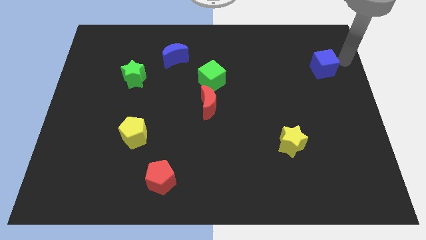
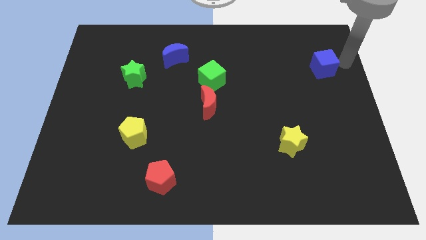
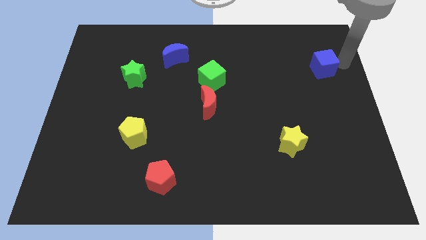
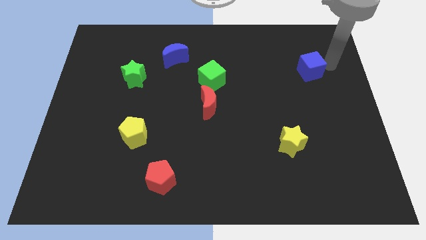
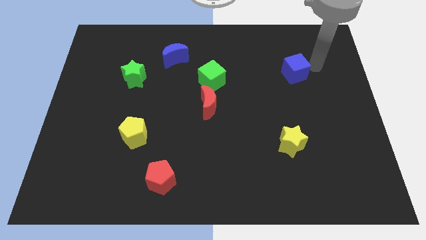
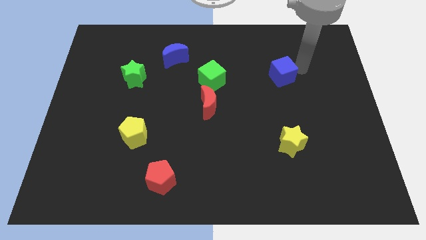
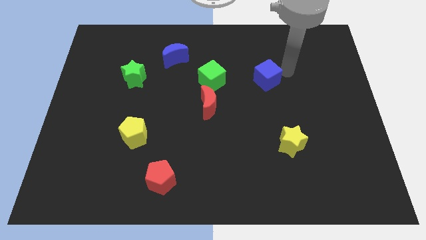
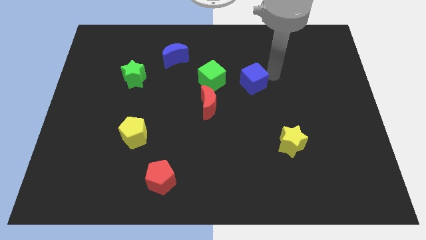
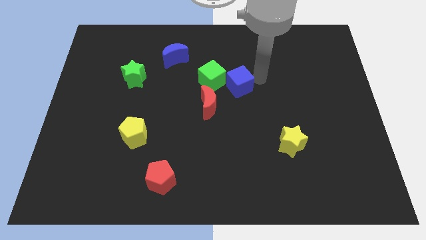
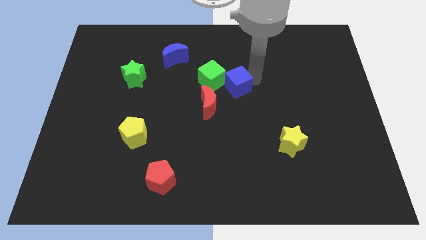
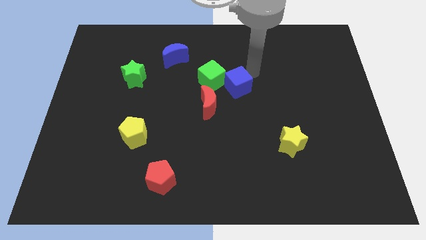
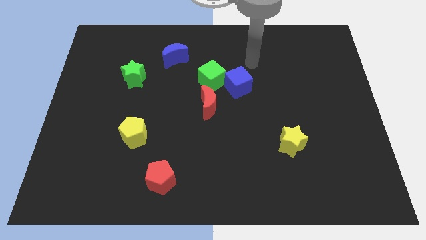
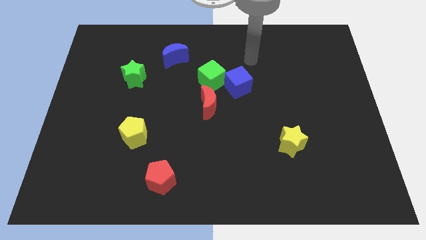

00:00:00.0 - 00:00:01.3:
push the blue cube closer to the green cube

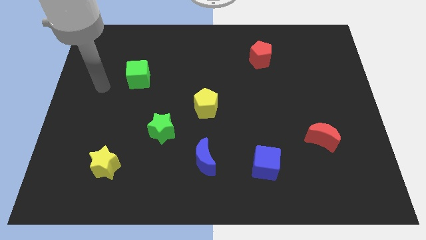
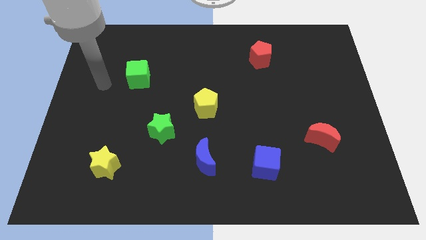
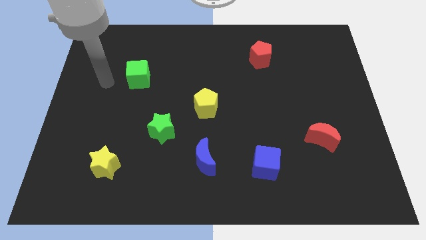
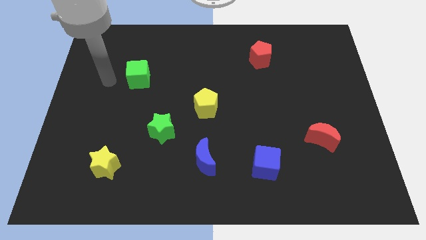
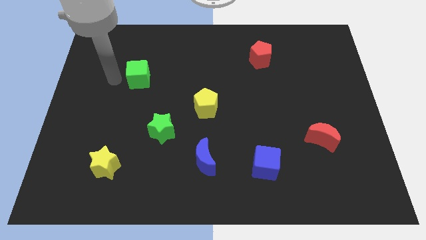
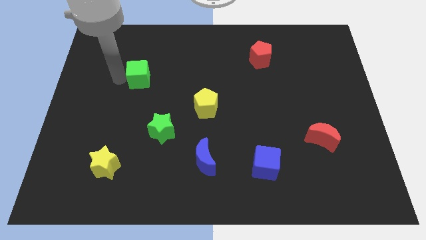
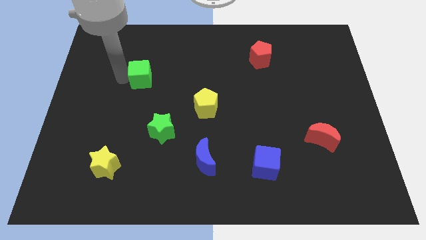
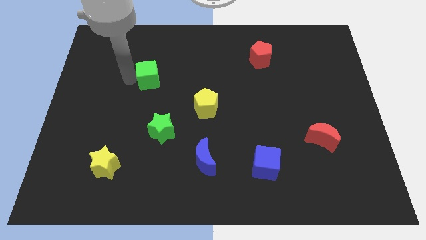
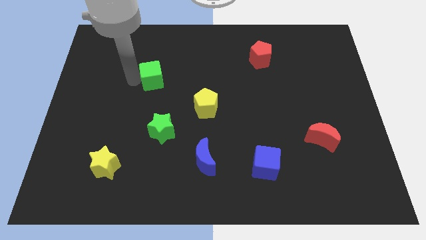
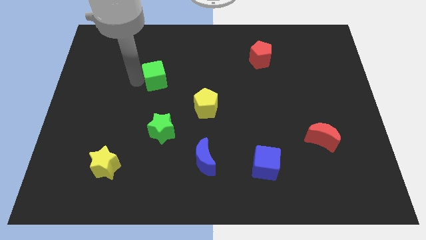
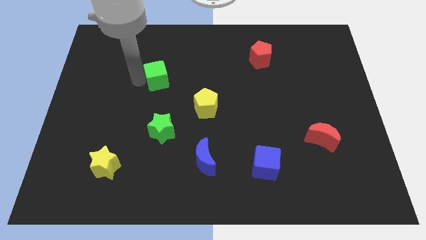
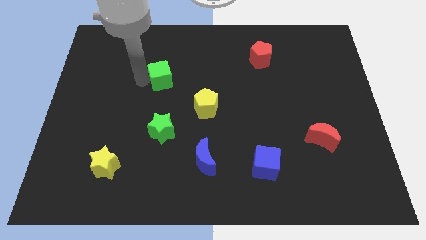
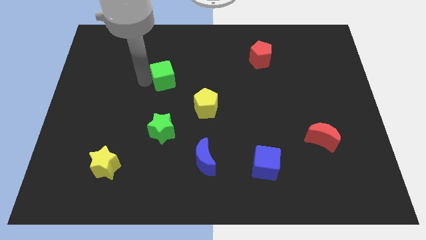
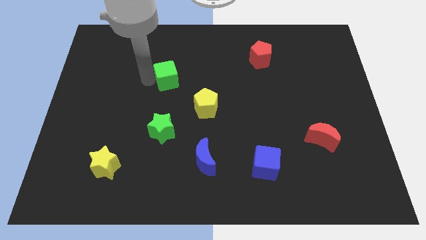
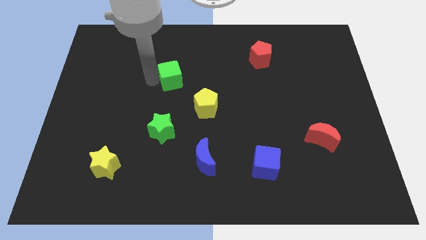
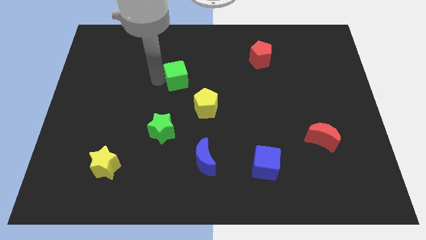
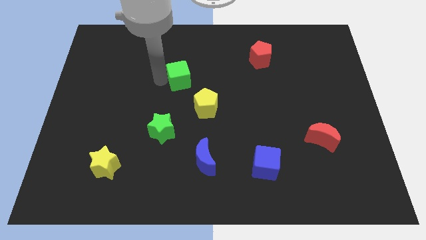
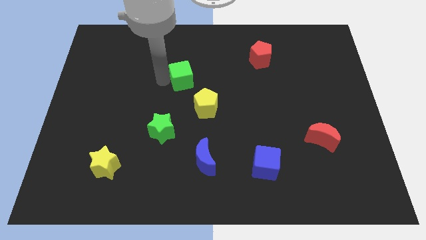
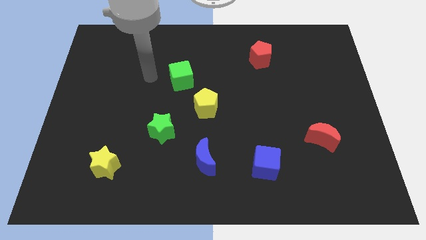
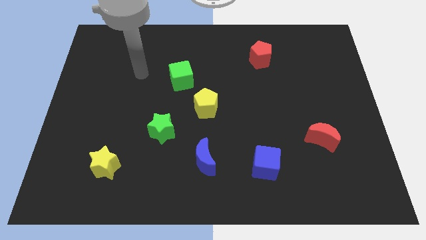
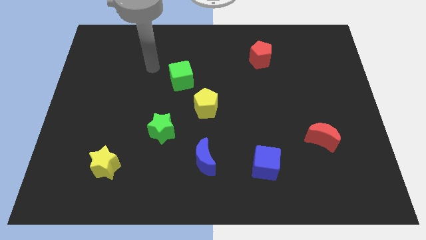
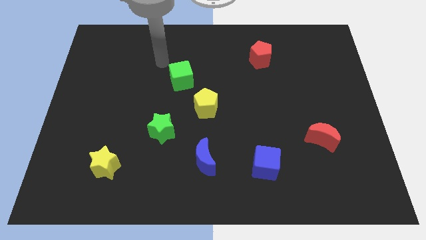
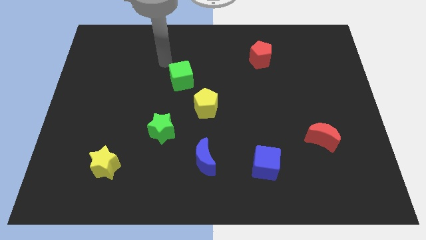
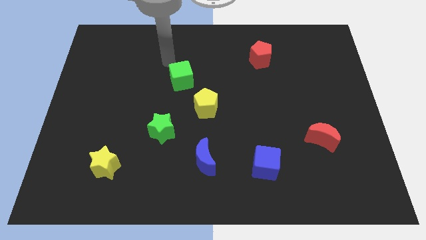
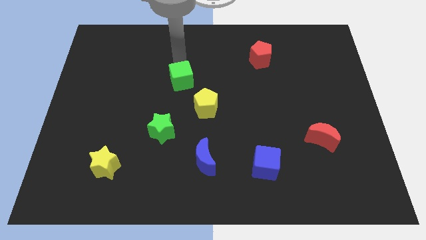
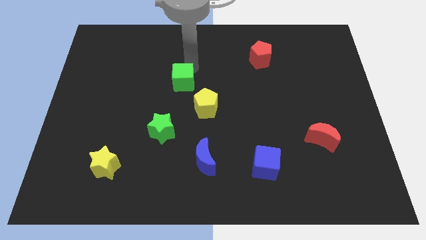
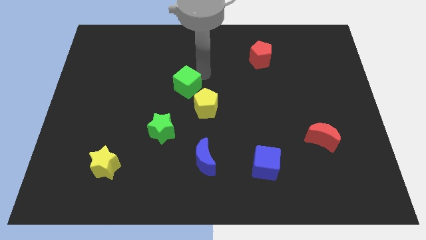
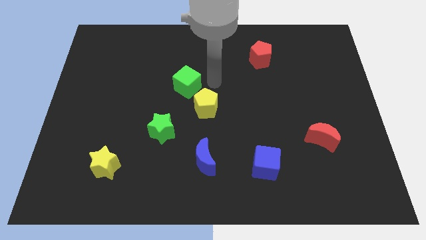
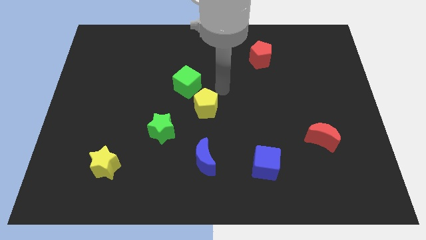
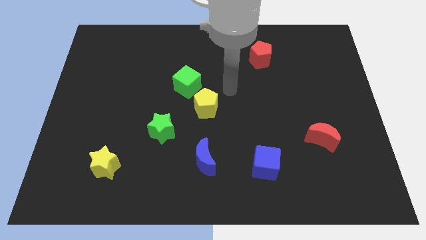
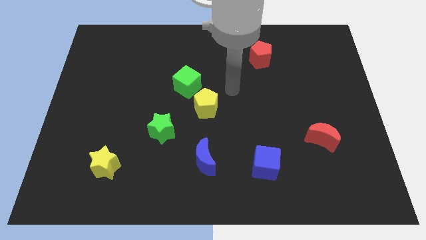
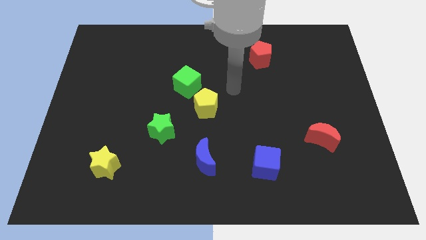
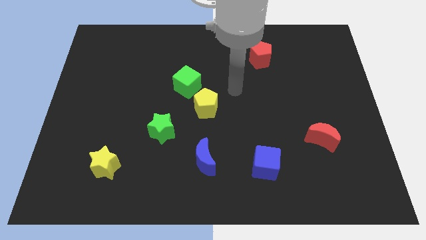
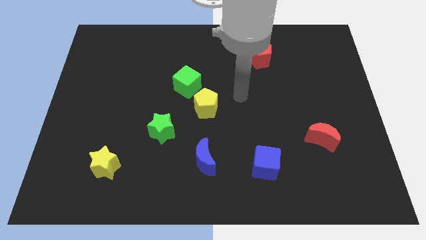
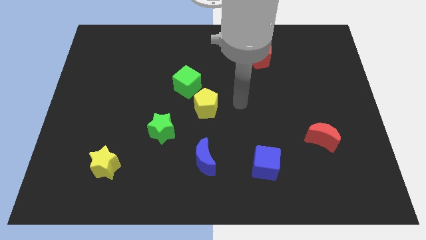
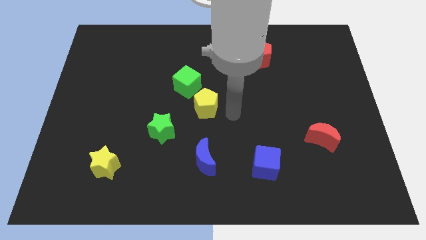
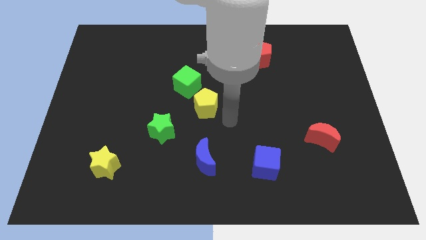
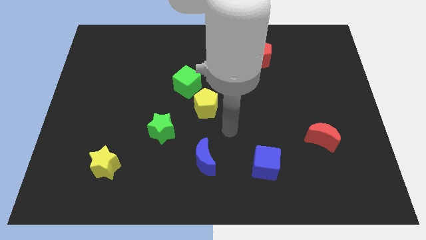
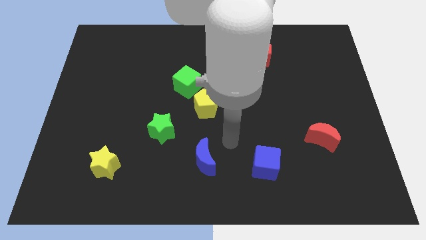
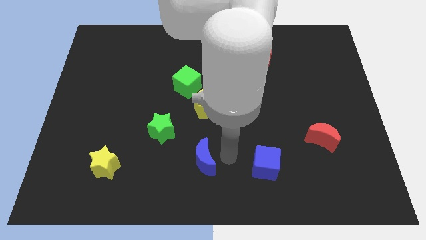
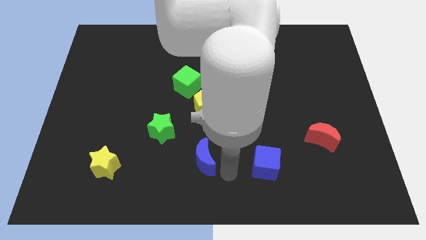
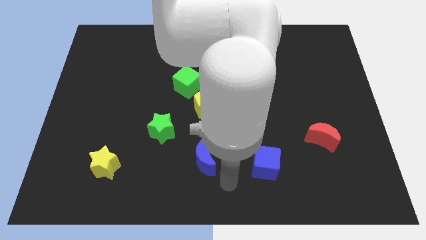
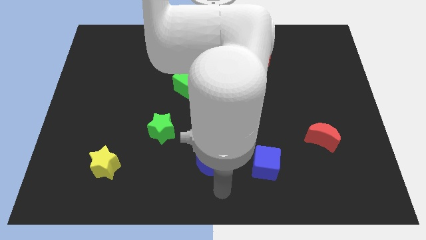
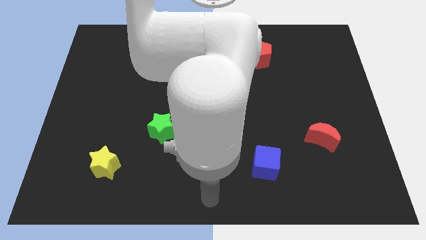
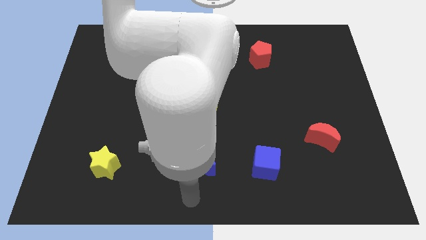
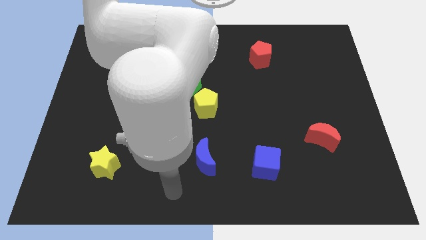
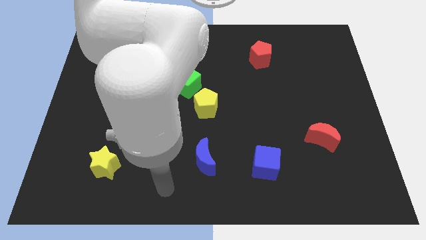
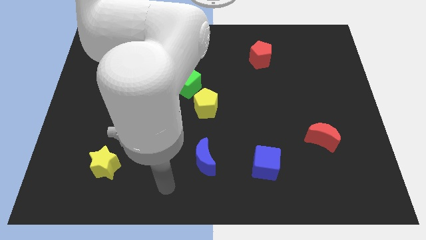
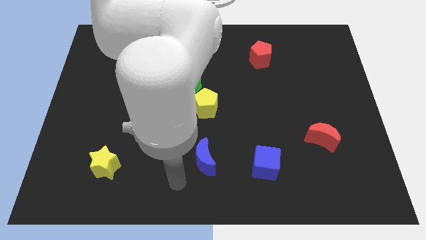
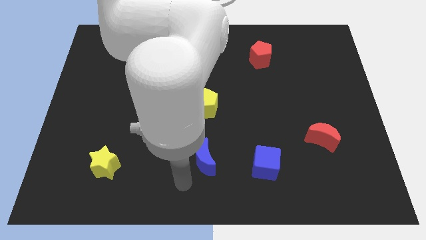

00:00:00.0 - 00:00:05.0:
place the green cube towards the top left corner of the yellow pentagon

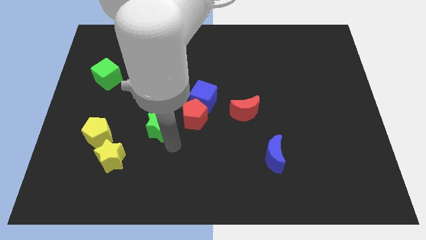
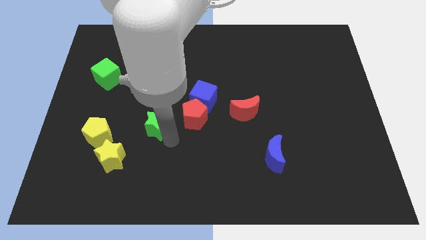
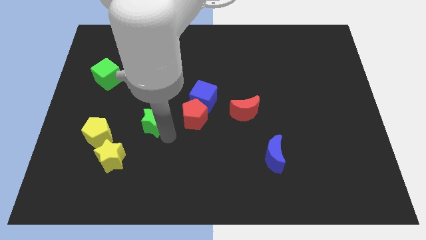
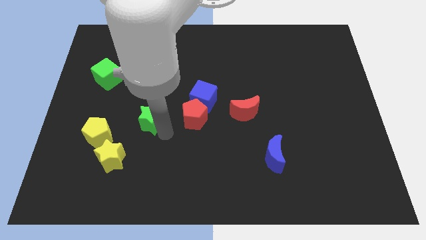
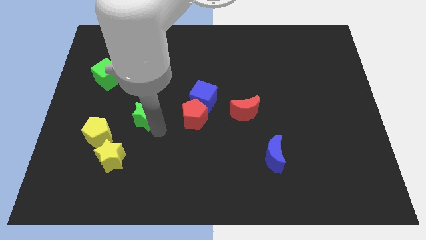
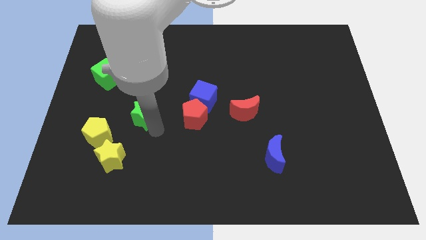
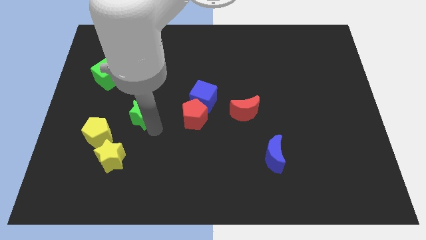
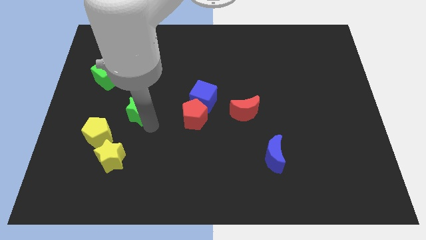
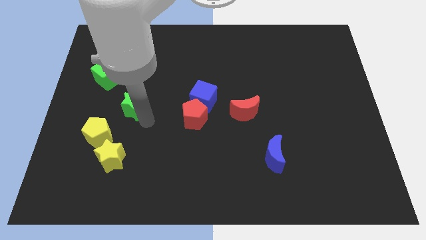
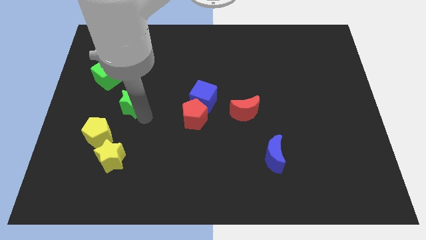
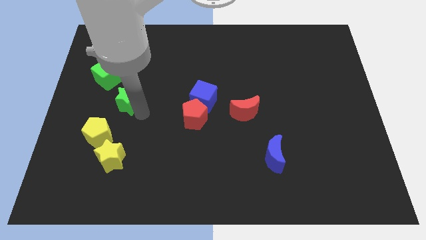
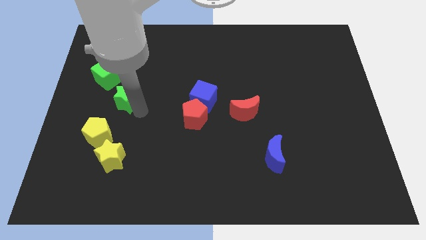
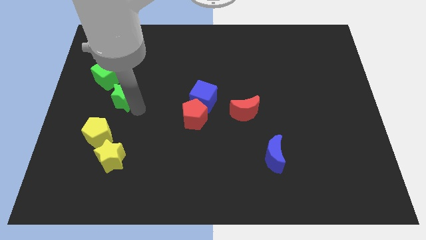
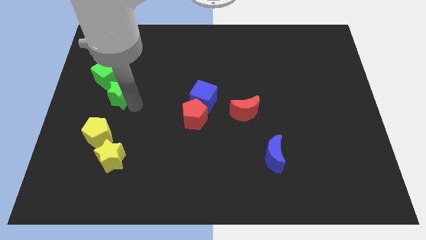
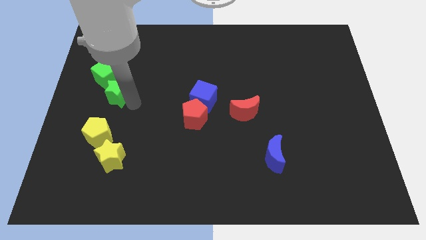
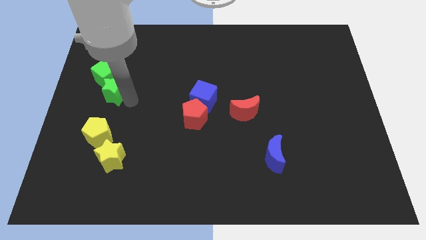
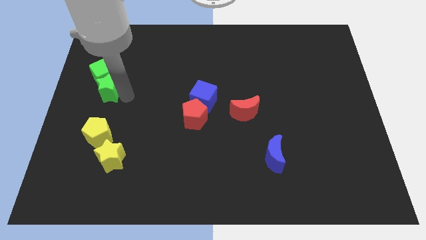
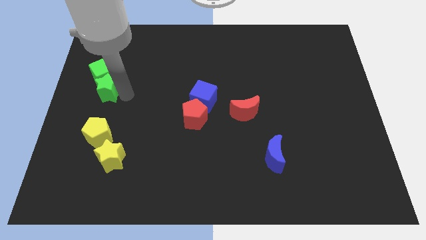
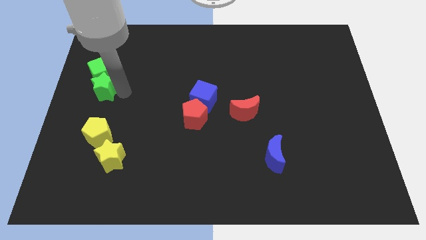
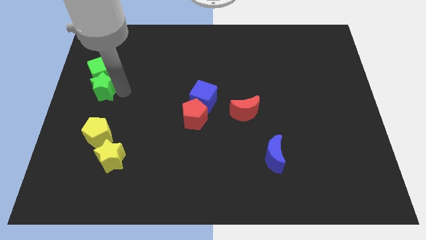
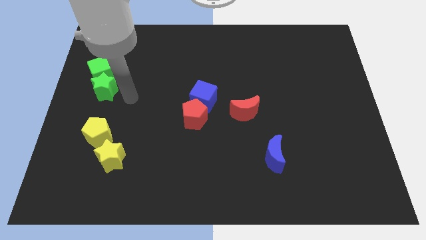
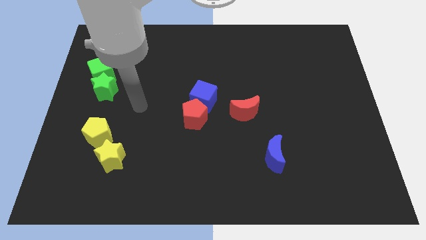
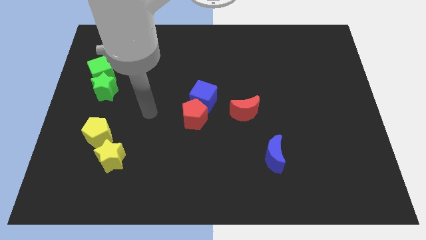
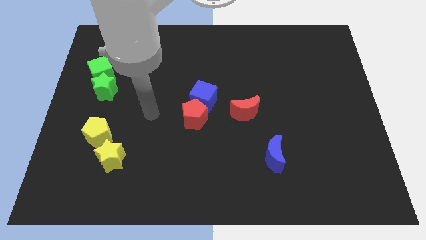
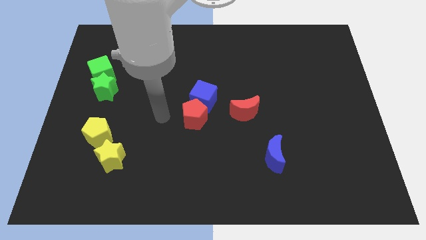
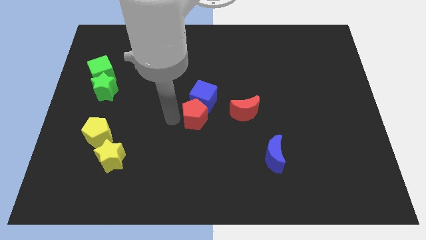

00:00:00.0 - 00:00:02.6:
push the green star into the green cube
